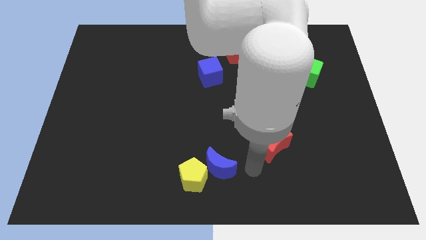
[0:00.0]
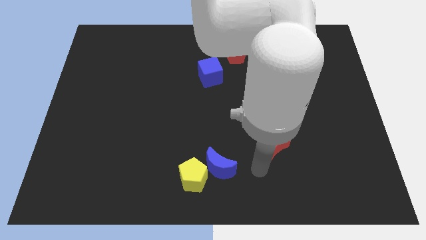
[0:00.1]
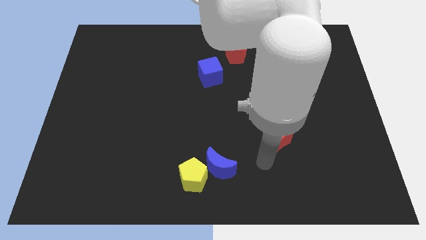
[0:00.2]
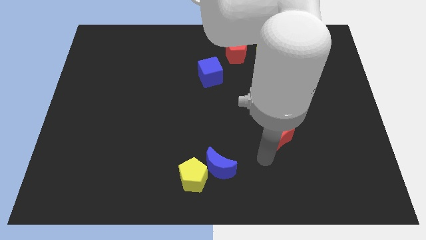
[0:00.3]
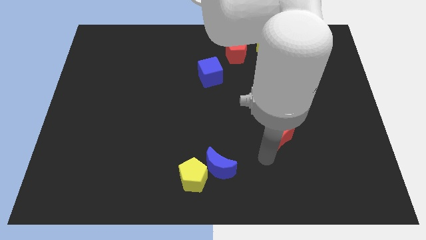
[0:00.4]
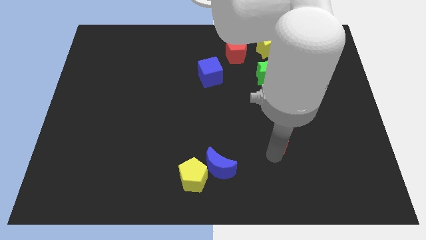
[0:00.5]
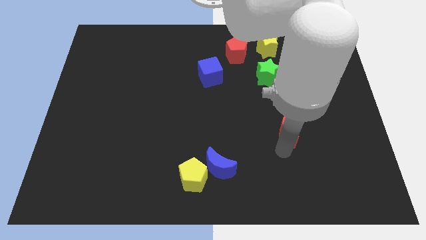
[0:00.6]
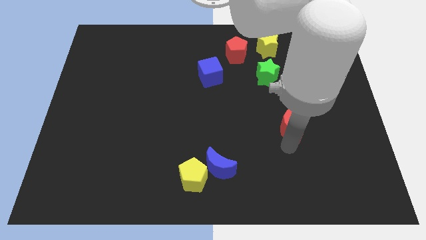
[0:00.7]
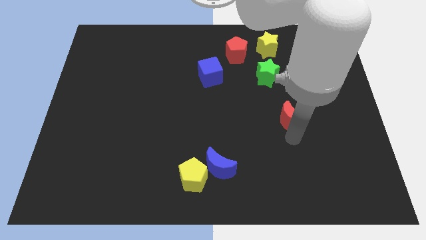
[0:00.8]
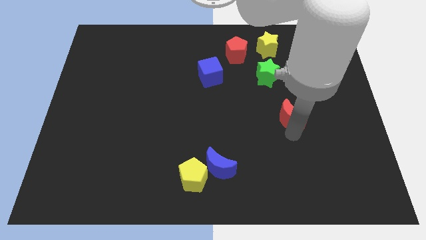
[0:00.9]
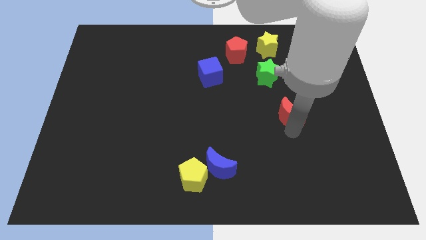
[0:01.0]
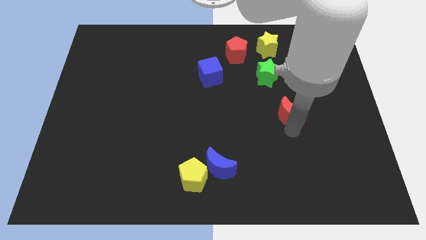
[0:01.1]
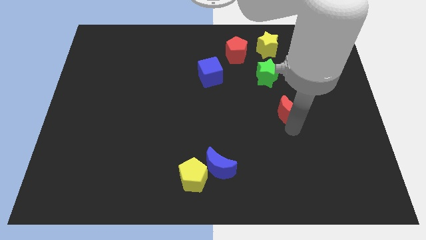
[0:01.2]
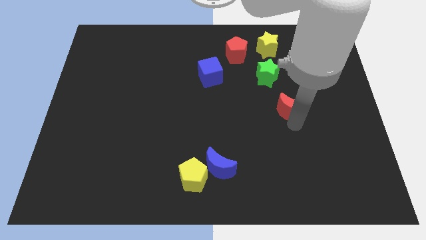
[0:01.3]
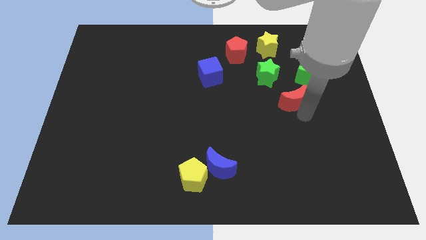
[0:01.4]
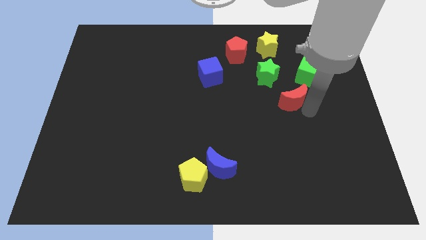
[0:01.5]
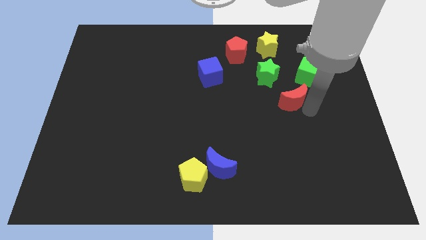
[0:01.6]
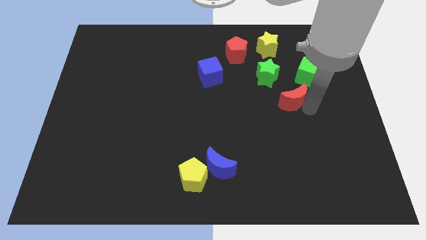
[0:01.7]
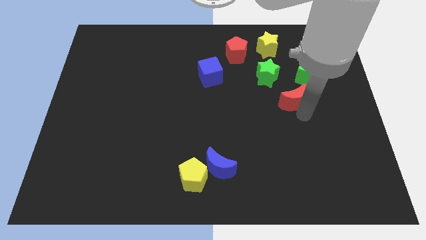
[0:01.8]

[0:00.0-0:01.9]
push the red crescent towards the green cube

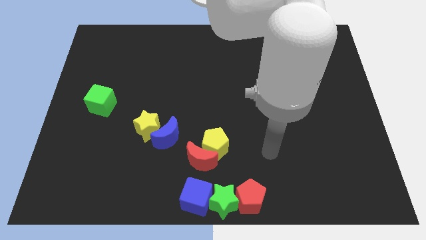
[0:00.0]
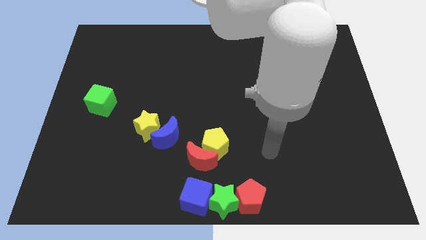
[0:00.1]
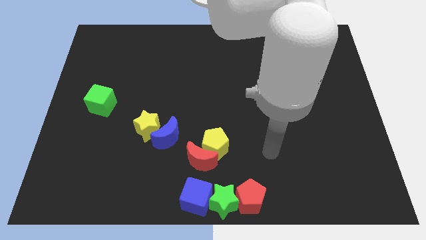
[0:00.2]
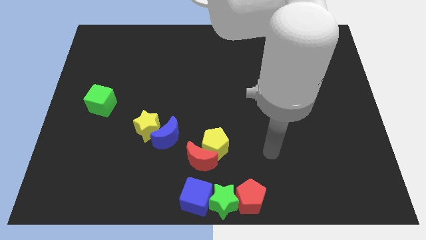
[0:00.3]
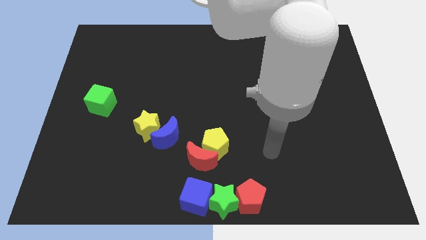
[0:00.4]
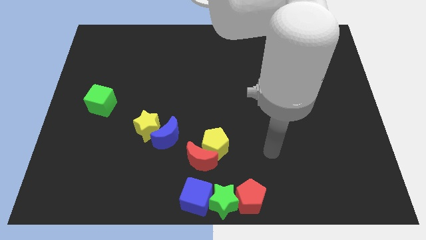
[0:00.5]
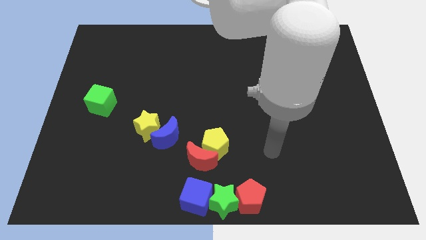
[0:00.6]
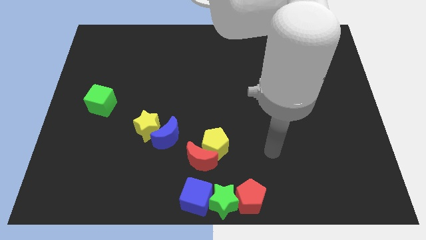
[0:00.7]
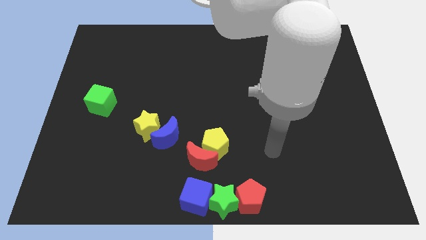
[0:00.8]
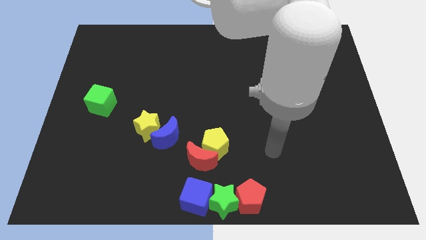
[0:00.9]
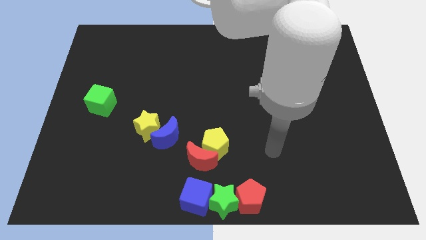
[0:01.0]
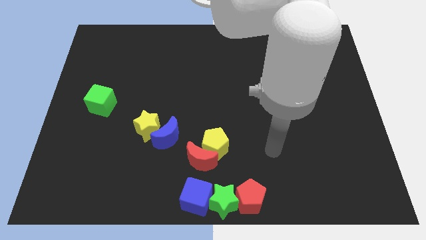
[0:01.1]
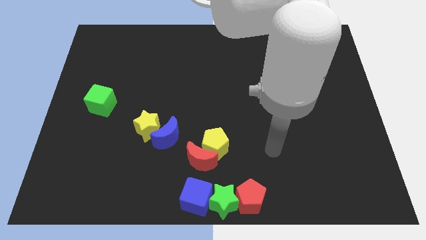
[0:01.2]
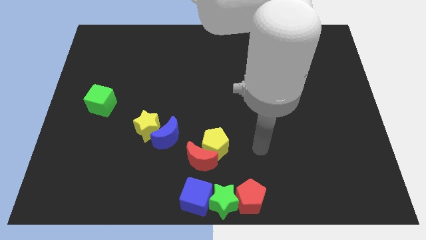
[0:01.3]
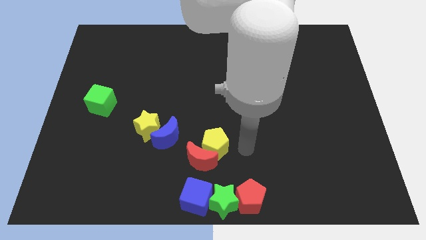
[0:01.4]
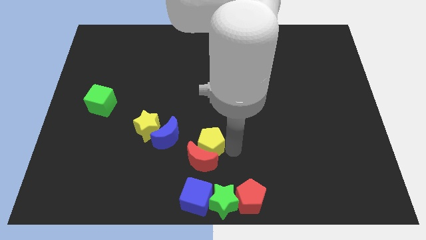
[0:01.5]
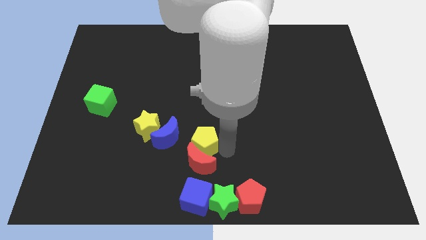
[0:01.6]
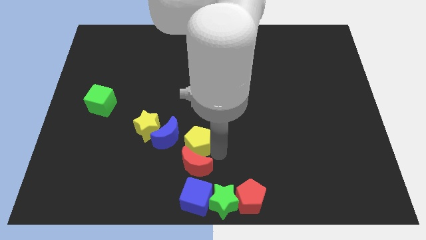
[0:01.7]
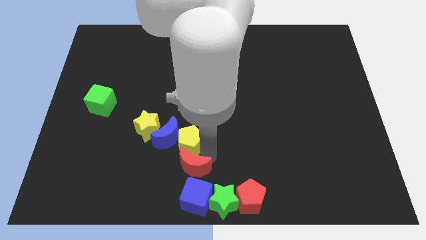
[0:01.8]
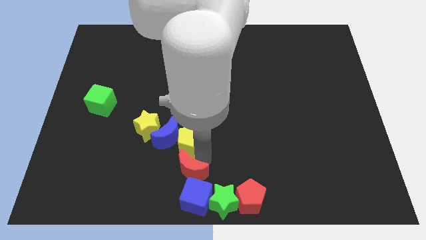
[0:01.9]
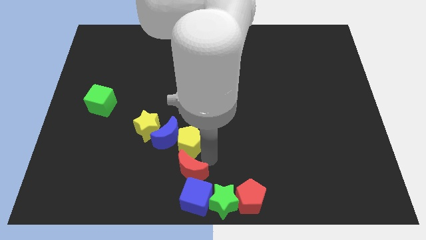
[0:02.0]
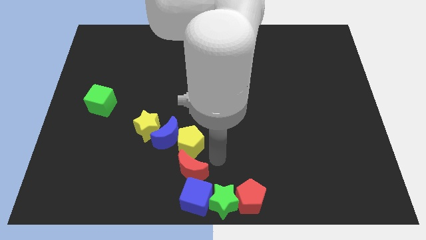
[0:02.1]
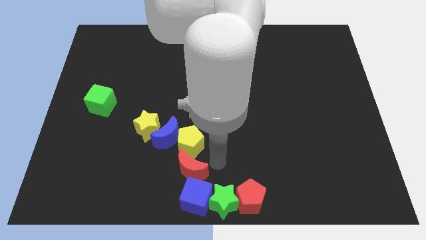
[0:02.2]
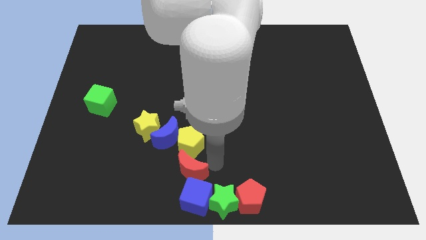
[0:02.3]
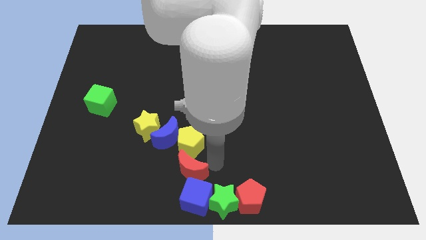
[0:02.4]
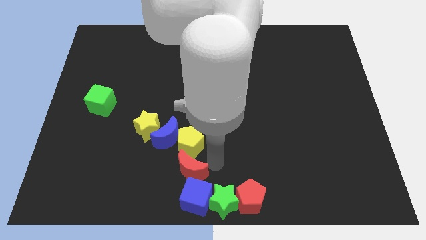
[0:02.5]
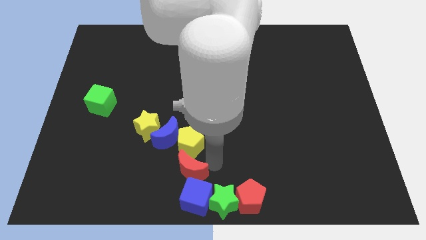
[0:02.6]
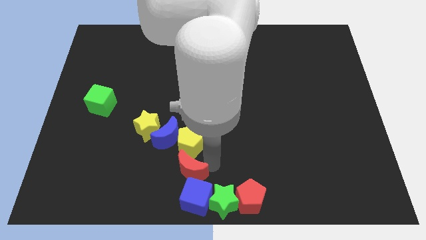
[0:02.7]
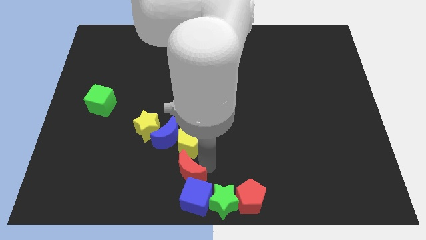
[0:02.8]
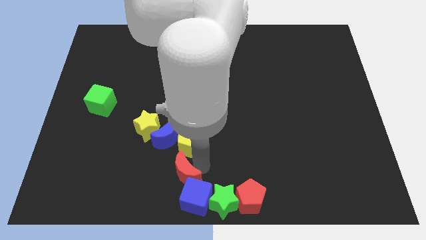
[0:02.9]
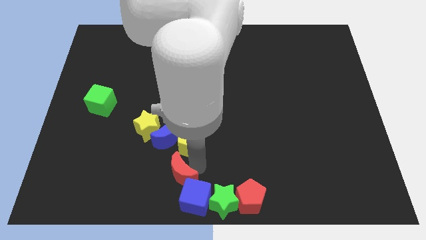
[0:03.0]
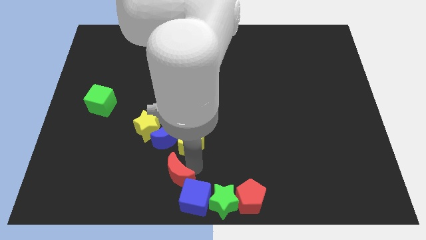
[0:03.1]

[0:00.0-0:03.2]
move the arm towards the red crescent

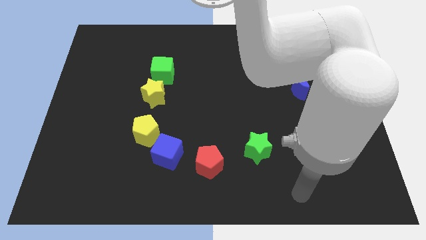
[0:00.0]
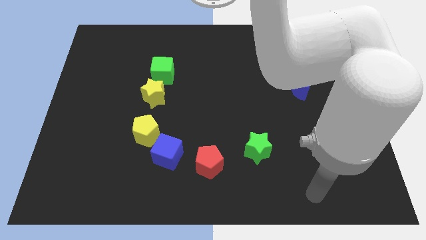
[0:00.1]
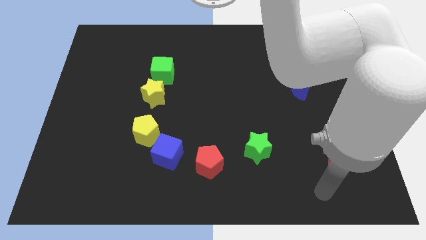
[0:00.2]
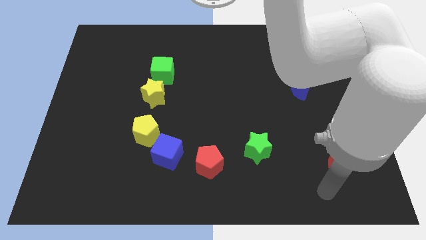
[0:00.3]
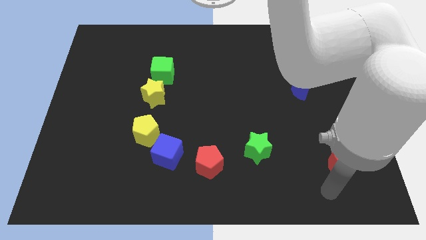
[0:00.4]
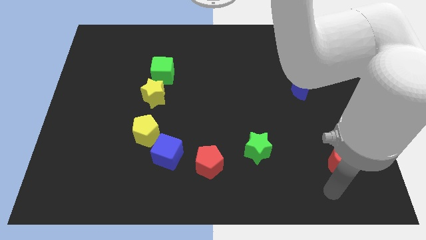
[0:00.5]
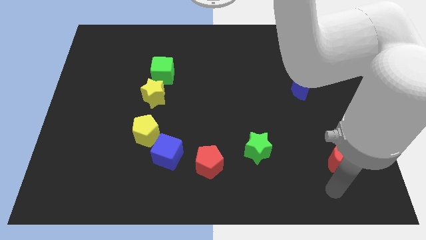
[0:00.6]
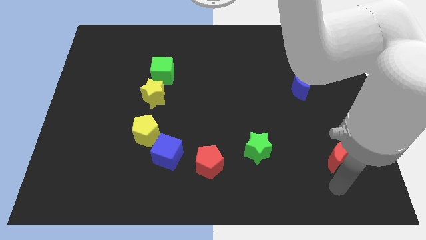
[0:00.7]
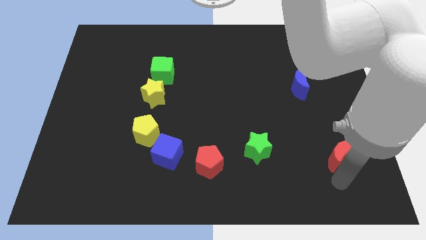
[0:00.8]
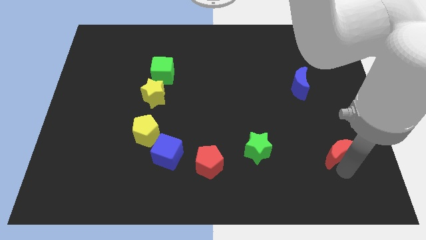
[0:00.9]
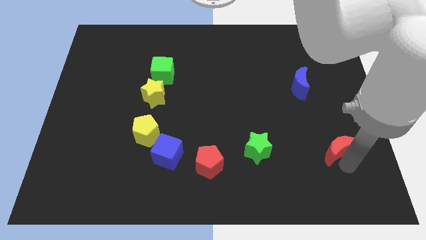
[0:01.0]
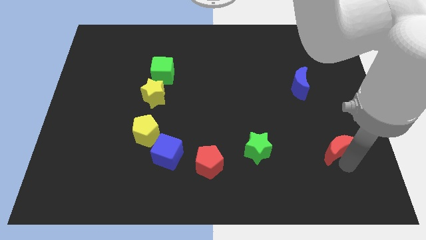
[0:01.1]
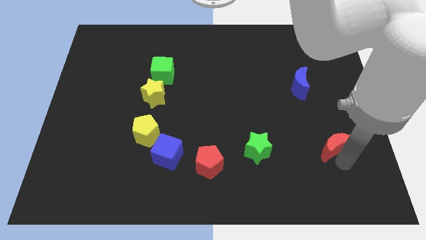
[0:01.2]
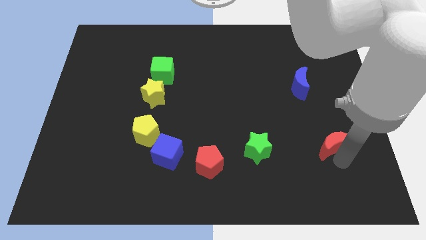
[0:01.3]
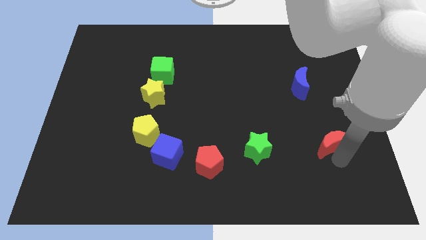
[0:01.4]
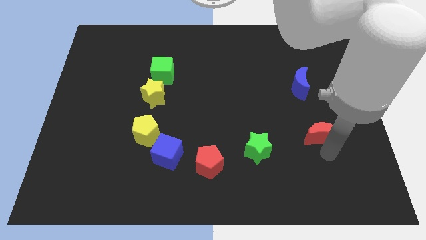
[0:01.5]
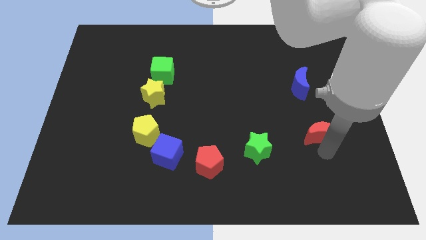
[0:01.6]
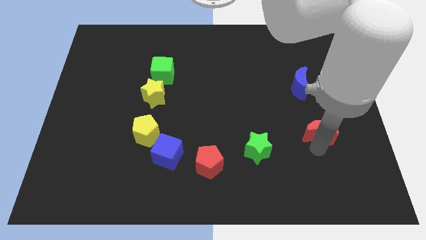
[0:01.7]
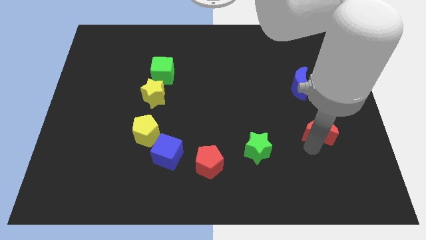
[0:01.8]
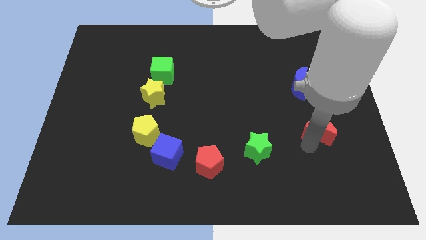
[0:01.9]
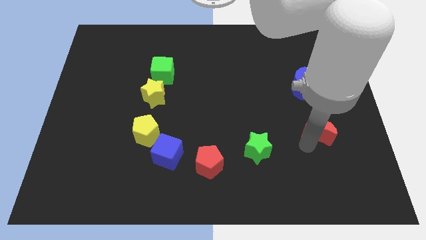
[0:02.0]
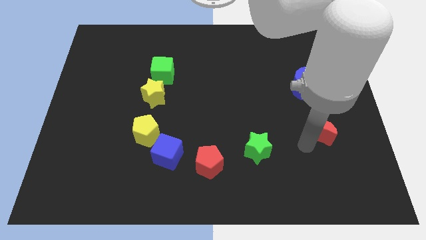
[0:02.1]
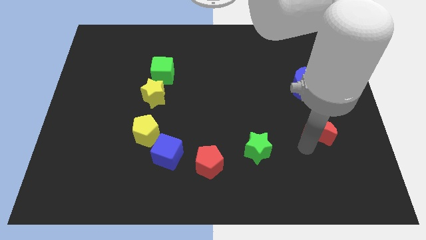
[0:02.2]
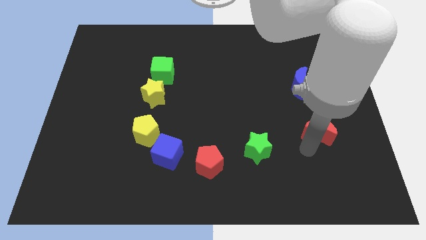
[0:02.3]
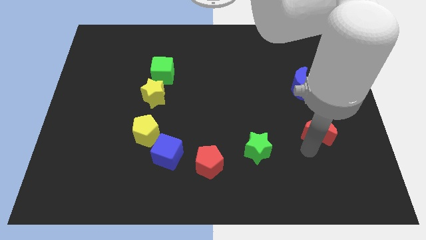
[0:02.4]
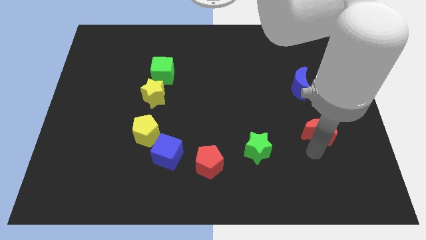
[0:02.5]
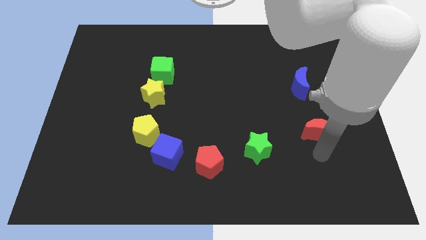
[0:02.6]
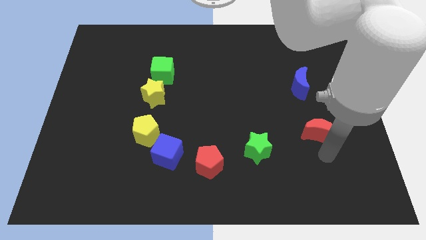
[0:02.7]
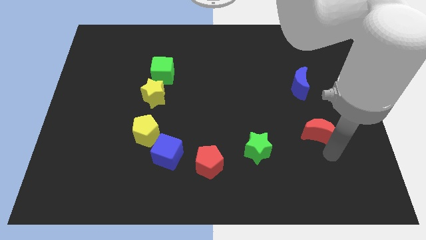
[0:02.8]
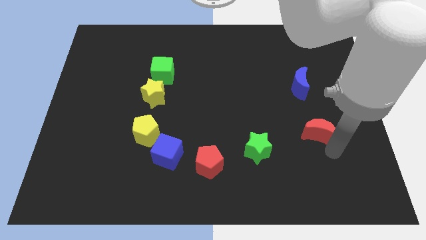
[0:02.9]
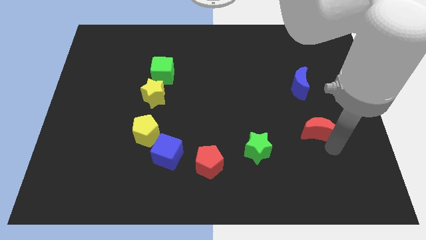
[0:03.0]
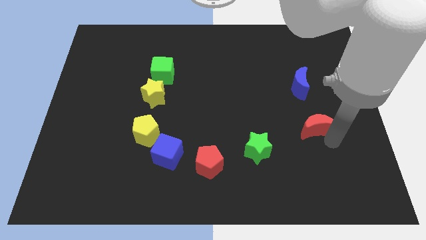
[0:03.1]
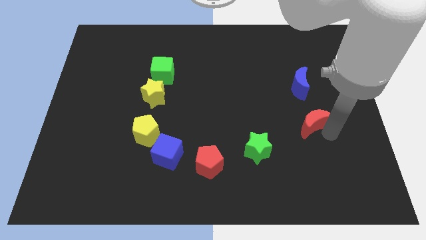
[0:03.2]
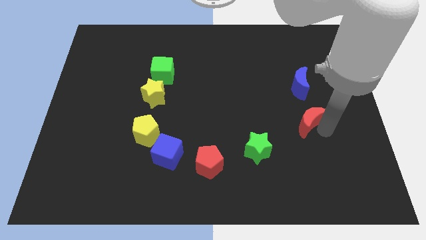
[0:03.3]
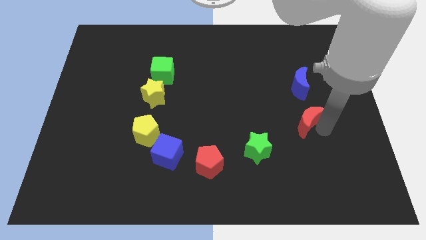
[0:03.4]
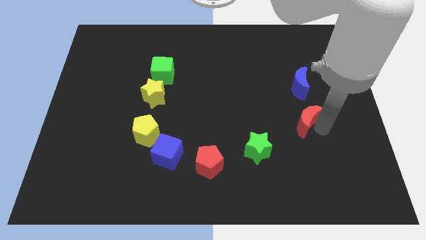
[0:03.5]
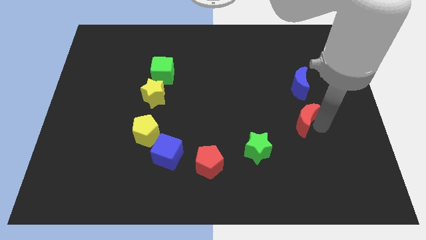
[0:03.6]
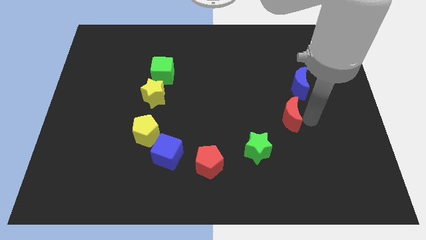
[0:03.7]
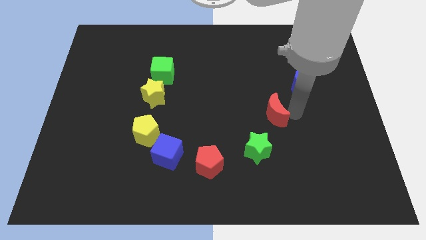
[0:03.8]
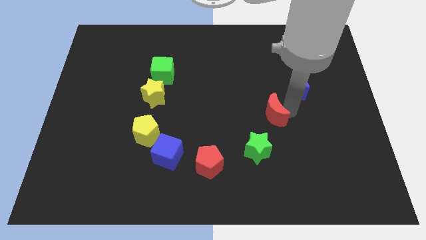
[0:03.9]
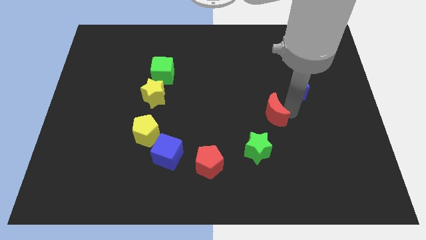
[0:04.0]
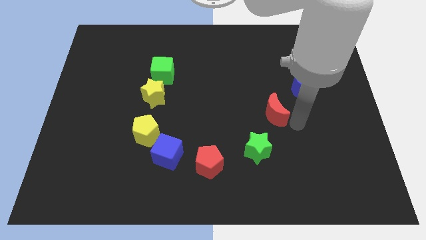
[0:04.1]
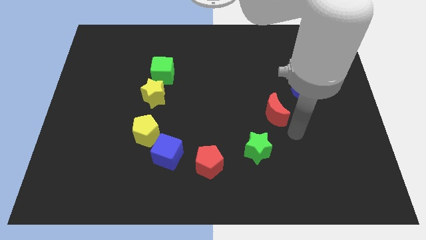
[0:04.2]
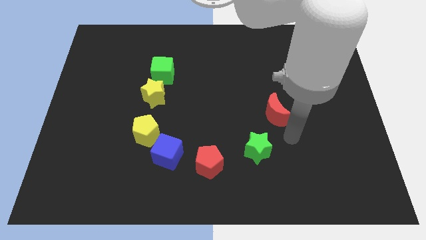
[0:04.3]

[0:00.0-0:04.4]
put the red moon at the top right of the green star
